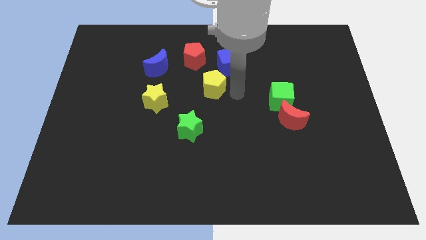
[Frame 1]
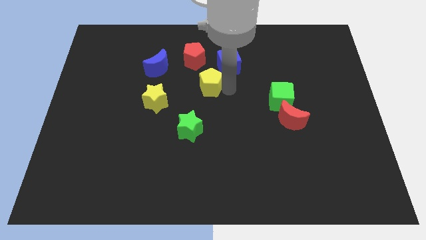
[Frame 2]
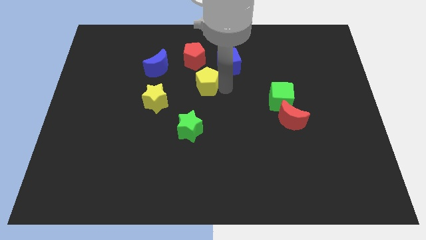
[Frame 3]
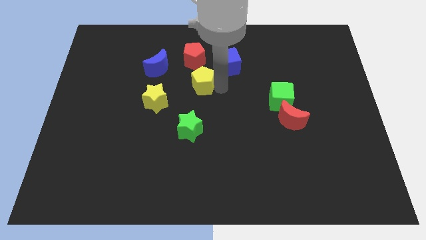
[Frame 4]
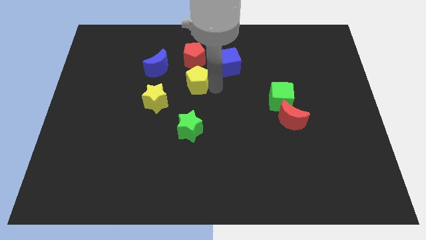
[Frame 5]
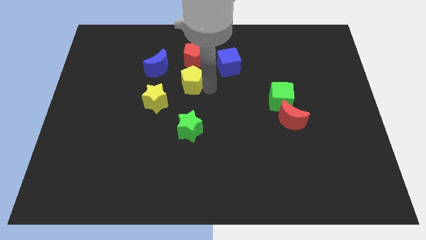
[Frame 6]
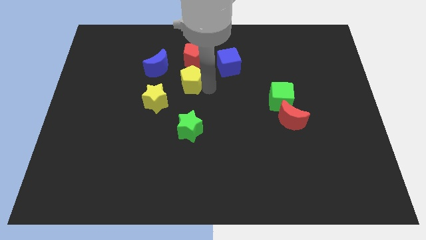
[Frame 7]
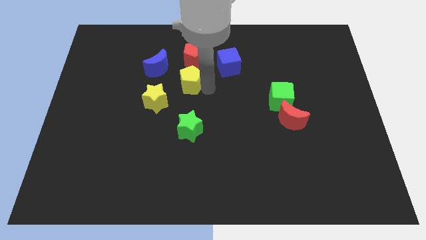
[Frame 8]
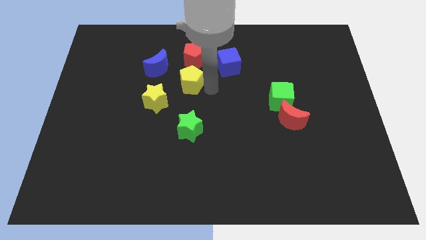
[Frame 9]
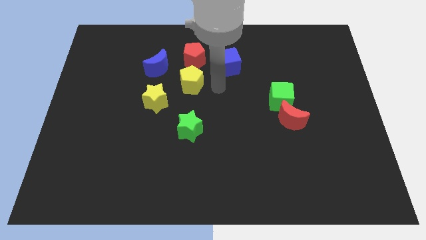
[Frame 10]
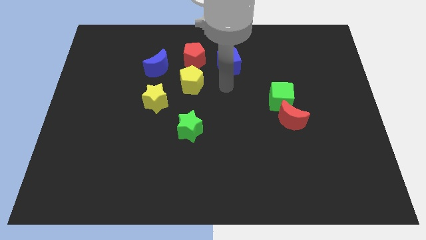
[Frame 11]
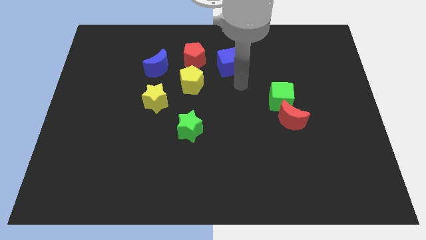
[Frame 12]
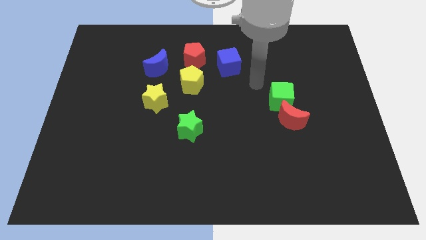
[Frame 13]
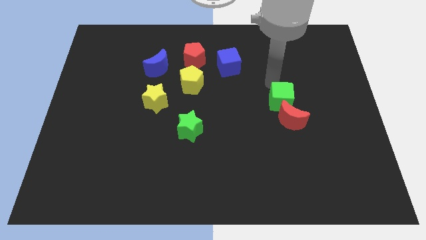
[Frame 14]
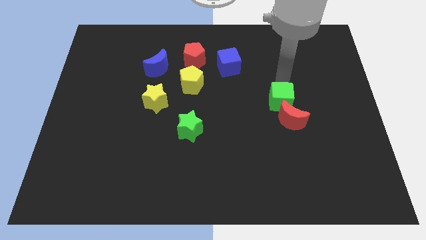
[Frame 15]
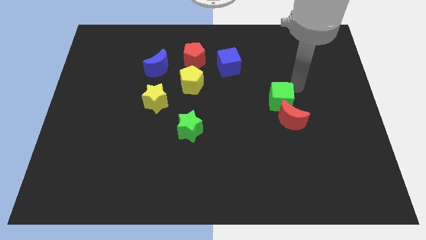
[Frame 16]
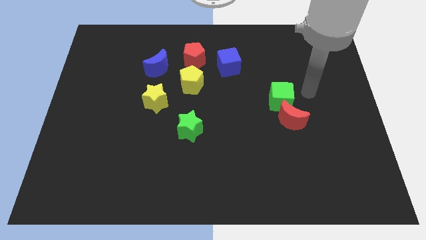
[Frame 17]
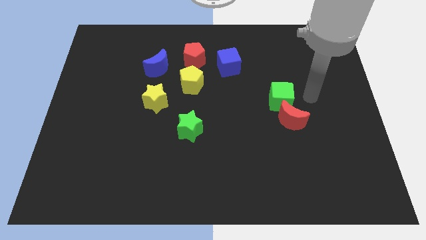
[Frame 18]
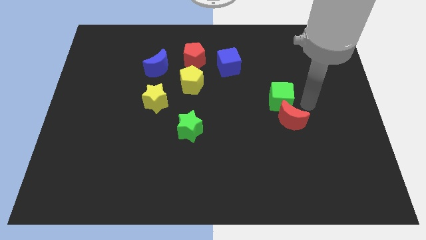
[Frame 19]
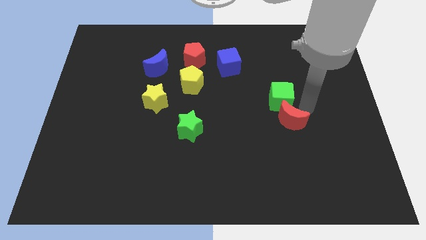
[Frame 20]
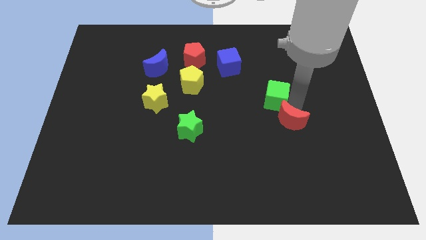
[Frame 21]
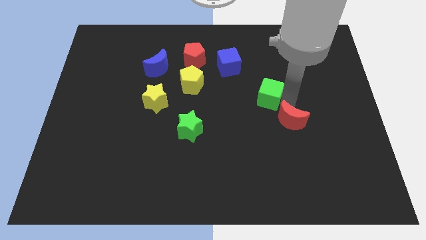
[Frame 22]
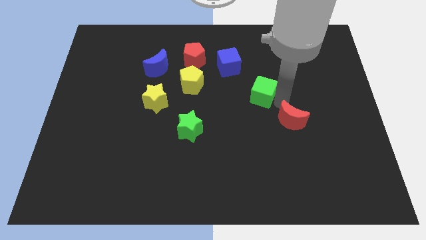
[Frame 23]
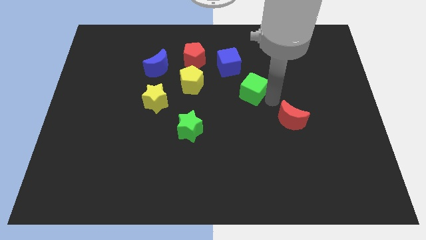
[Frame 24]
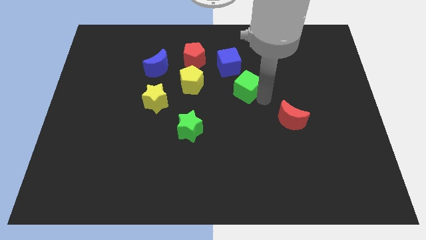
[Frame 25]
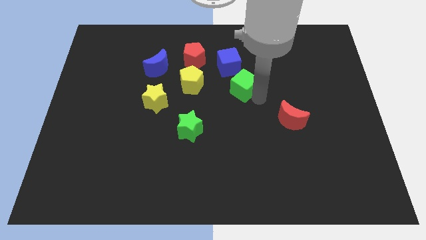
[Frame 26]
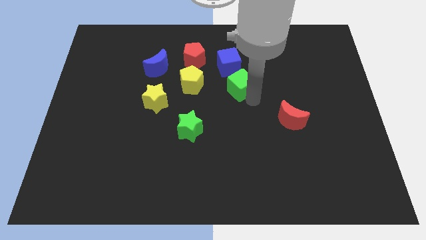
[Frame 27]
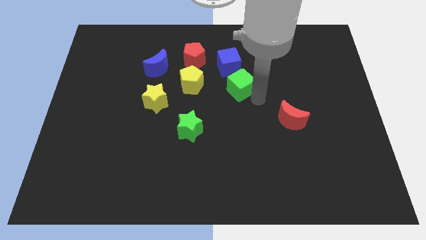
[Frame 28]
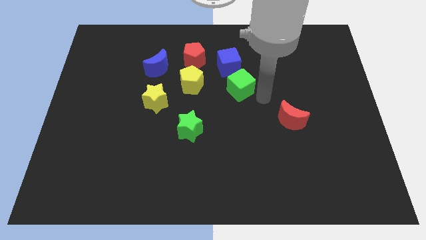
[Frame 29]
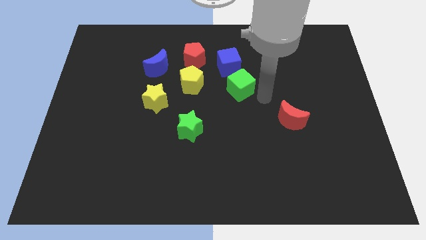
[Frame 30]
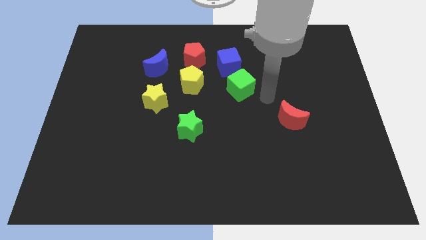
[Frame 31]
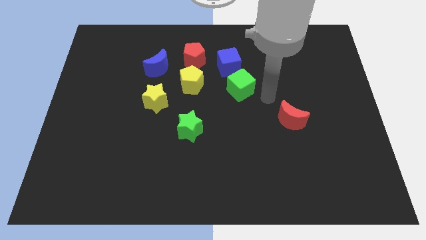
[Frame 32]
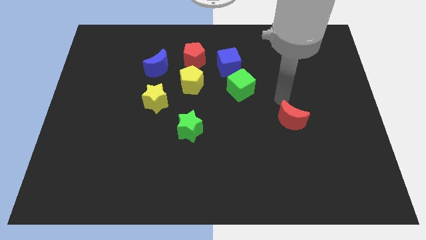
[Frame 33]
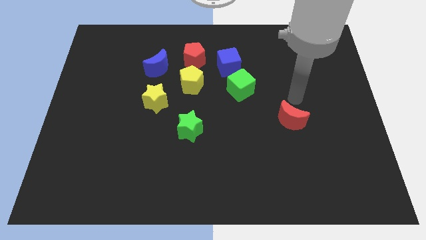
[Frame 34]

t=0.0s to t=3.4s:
push the yellow pentagon and green cube to the left side of the board

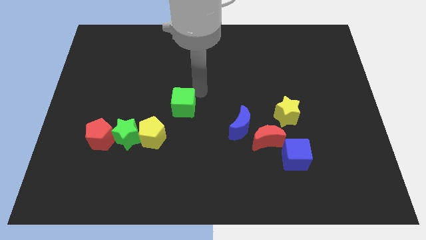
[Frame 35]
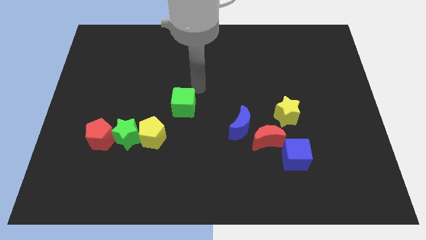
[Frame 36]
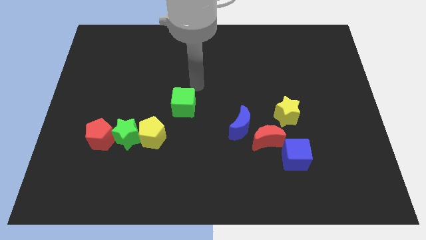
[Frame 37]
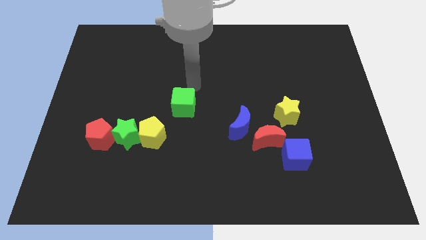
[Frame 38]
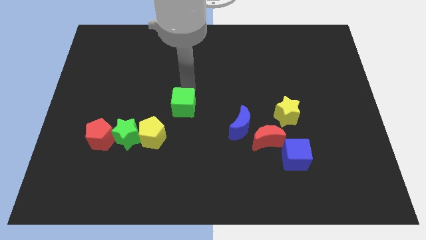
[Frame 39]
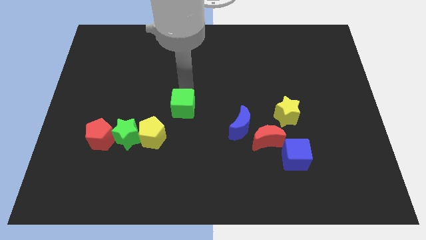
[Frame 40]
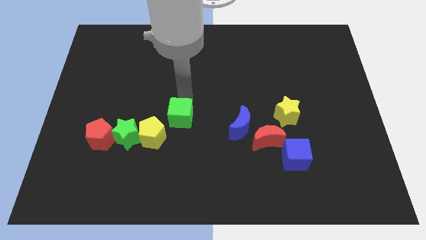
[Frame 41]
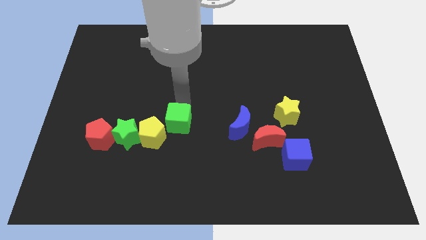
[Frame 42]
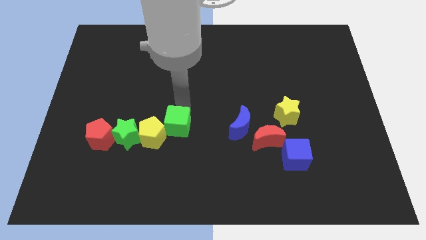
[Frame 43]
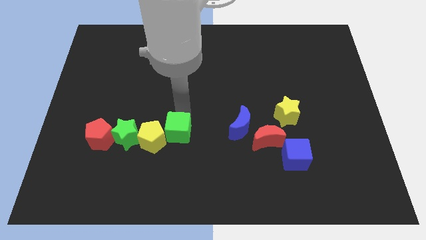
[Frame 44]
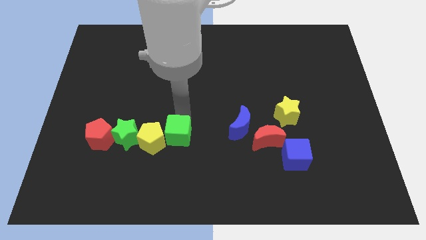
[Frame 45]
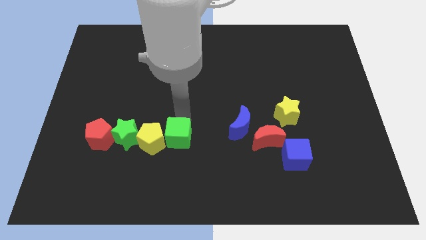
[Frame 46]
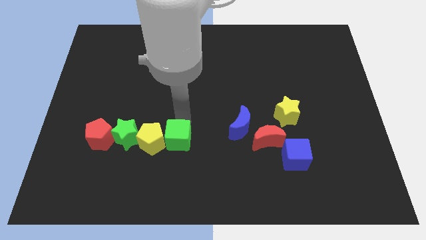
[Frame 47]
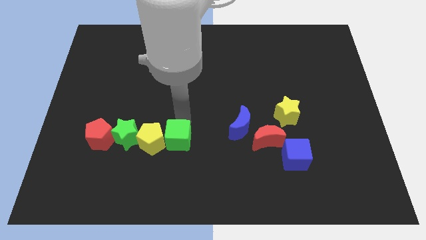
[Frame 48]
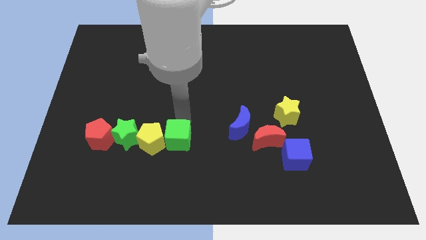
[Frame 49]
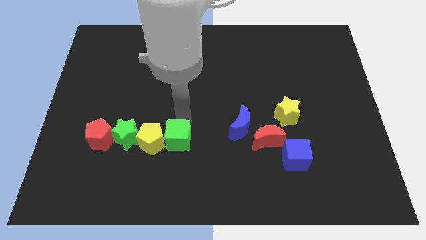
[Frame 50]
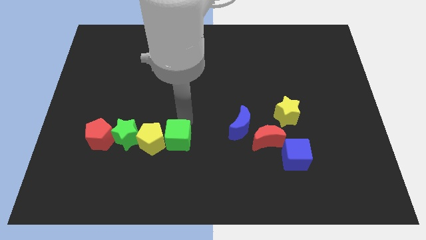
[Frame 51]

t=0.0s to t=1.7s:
put the green cube into the yellow pentagon

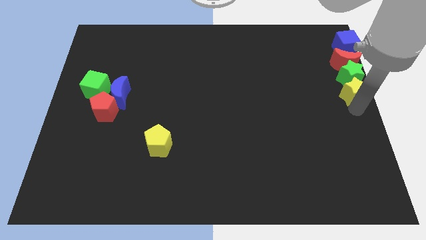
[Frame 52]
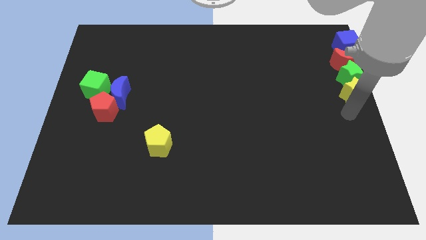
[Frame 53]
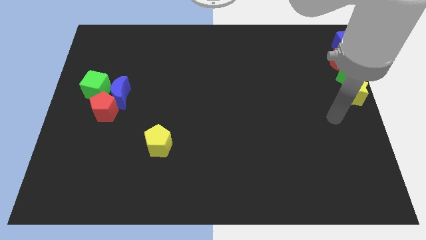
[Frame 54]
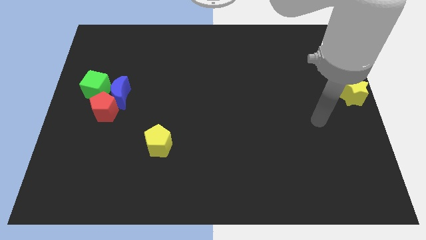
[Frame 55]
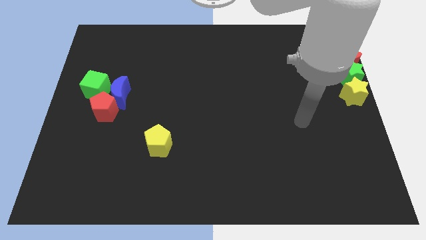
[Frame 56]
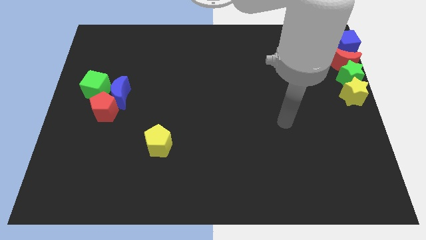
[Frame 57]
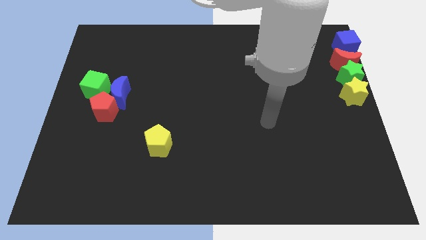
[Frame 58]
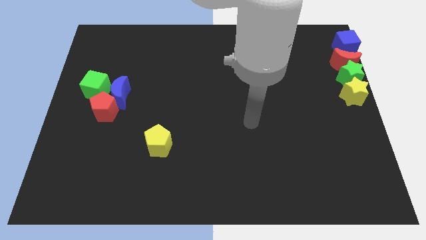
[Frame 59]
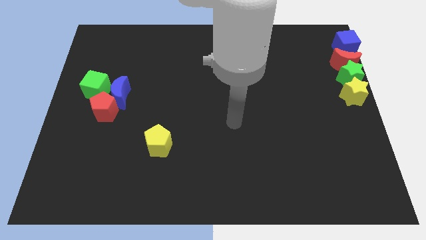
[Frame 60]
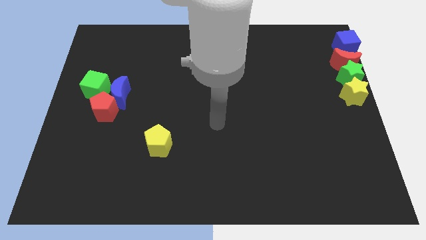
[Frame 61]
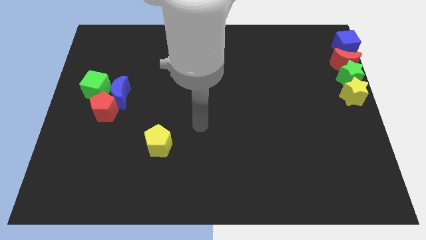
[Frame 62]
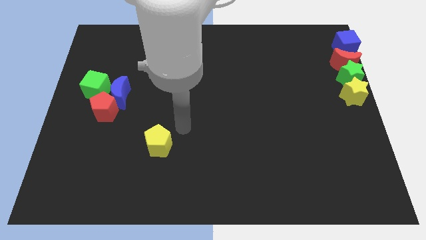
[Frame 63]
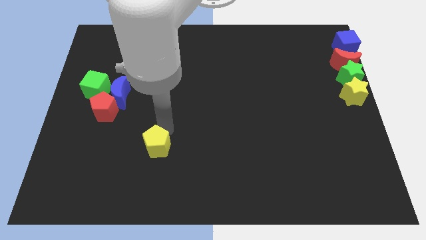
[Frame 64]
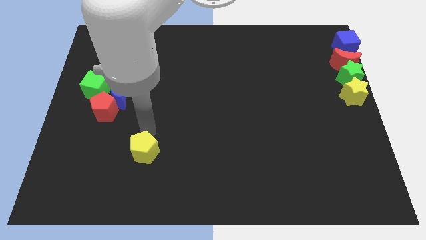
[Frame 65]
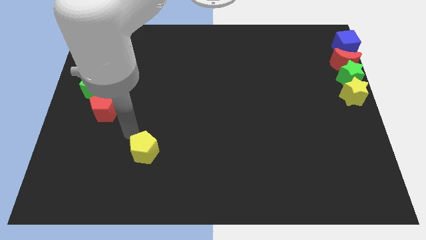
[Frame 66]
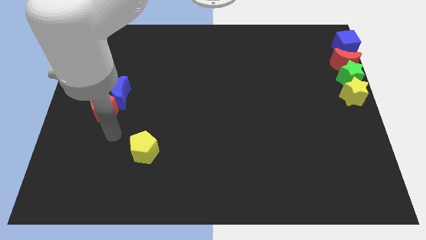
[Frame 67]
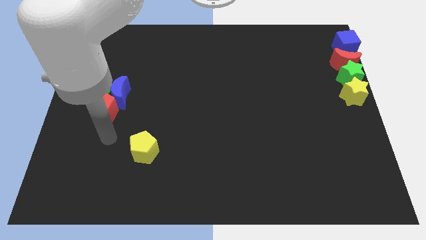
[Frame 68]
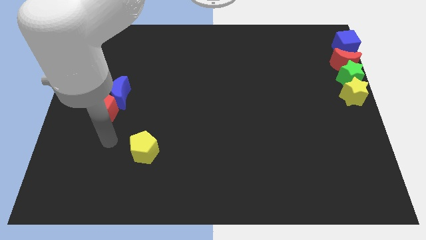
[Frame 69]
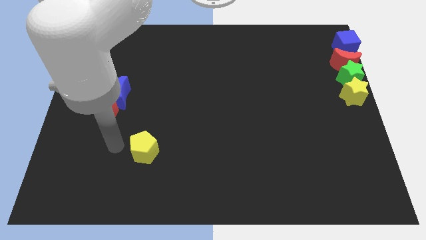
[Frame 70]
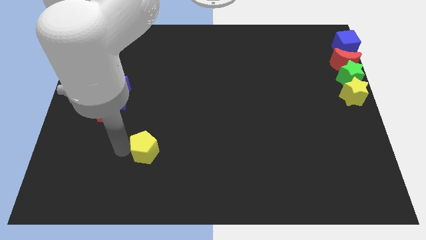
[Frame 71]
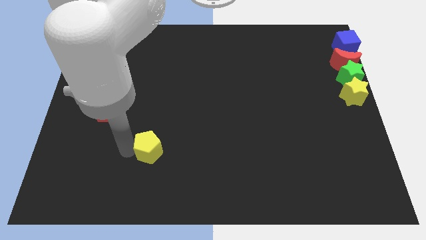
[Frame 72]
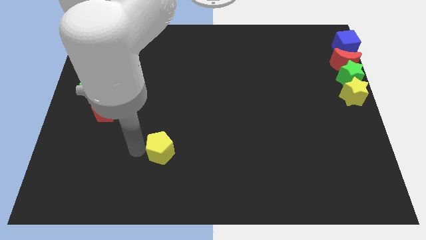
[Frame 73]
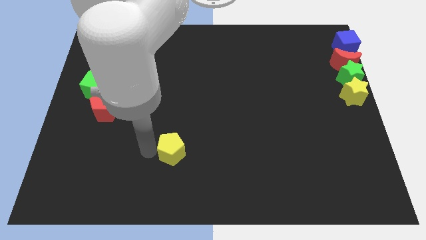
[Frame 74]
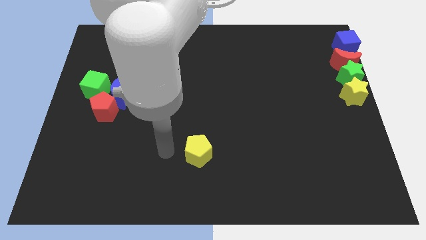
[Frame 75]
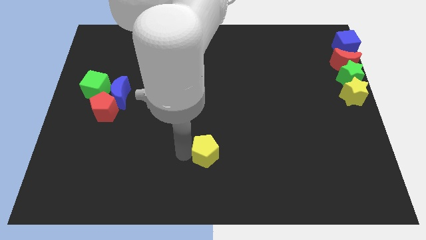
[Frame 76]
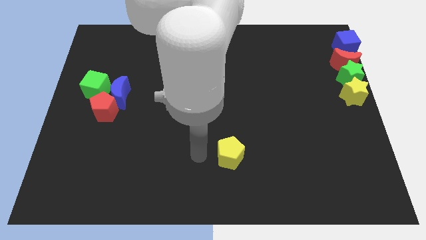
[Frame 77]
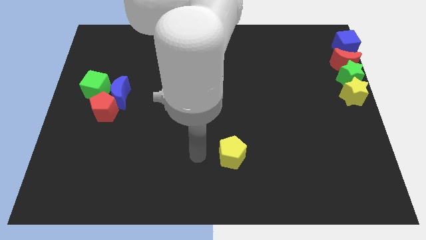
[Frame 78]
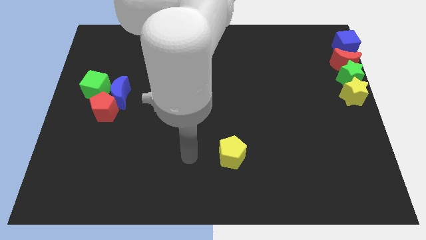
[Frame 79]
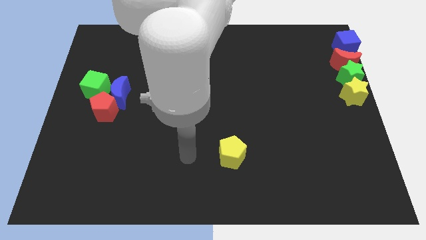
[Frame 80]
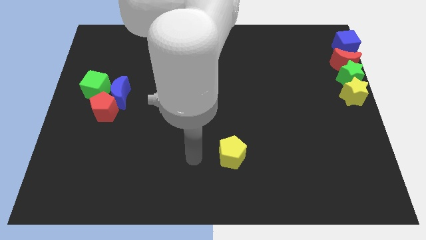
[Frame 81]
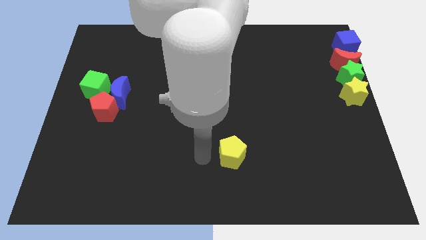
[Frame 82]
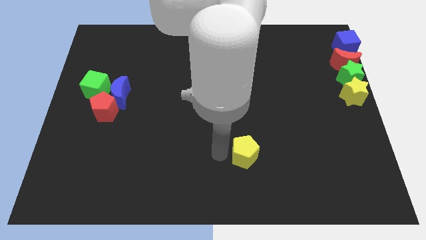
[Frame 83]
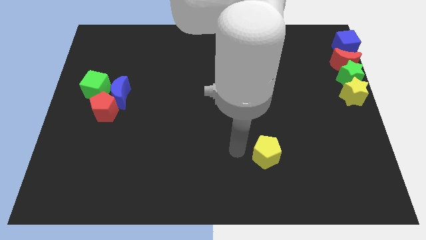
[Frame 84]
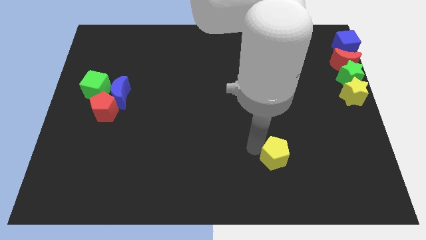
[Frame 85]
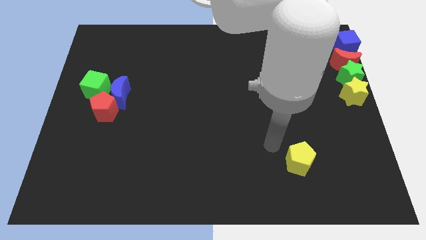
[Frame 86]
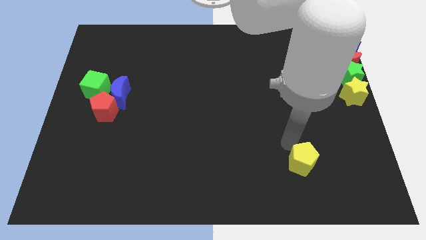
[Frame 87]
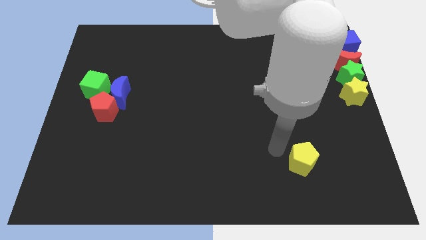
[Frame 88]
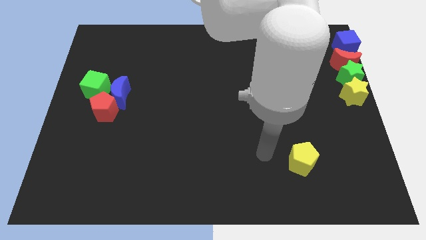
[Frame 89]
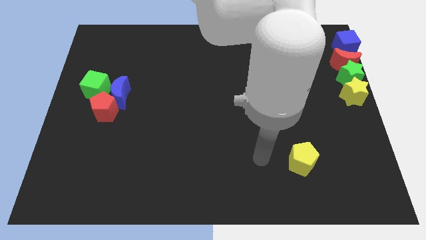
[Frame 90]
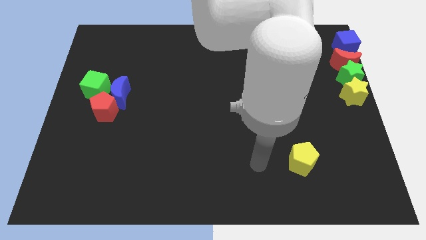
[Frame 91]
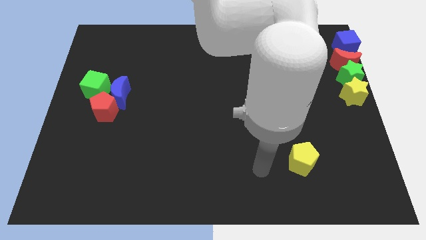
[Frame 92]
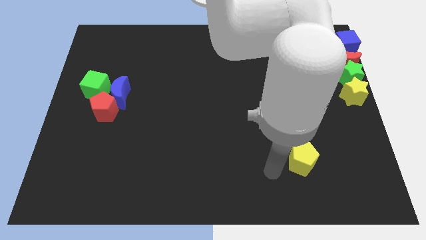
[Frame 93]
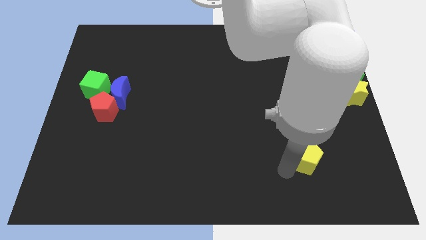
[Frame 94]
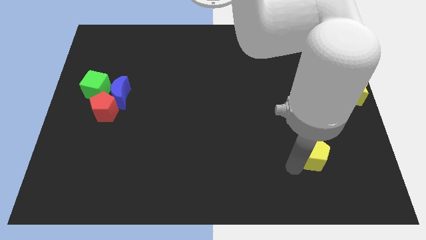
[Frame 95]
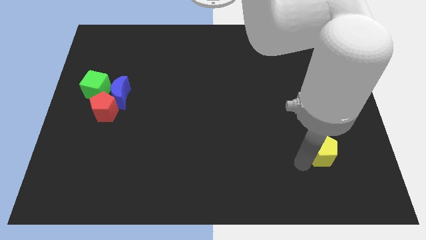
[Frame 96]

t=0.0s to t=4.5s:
move the yellow pentagon towards the right corner of the board
